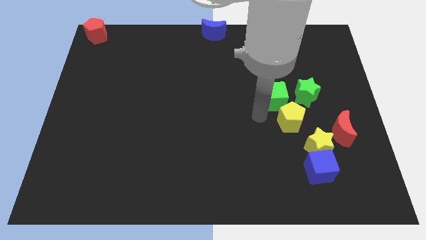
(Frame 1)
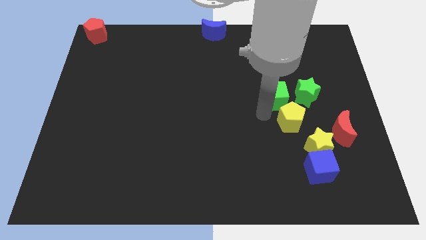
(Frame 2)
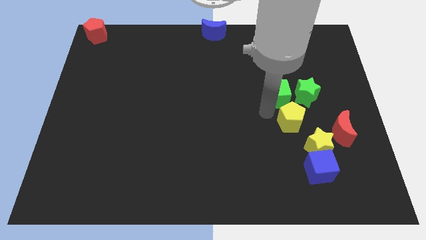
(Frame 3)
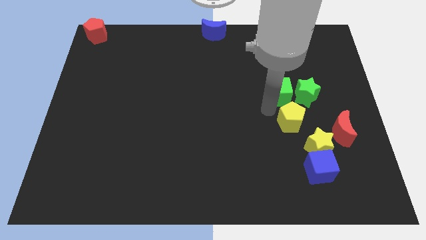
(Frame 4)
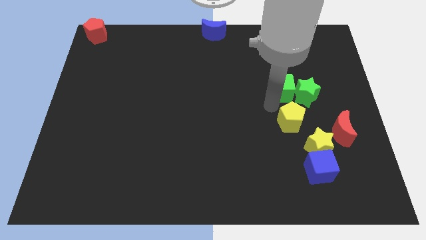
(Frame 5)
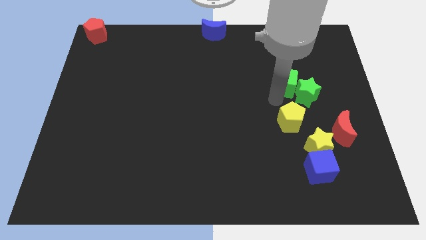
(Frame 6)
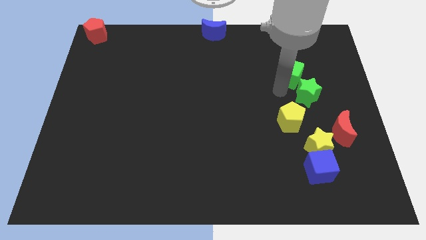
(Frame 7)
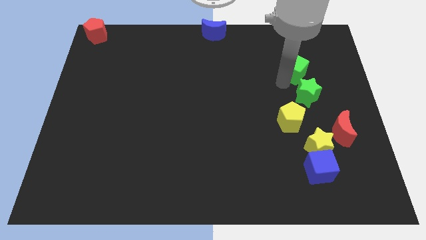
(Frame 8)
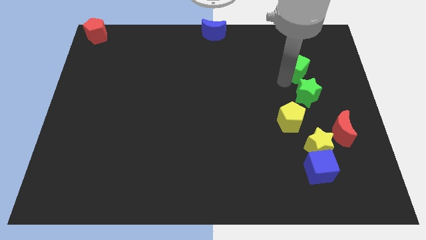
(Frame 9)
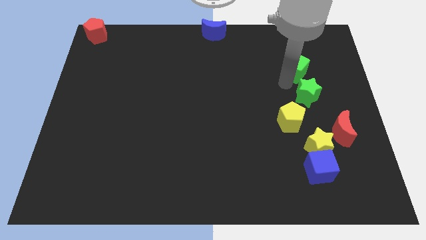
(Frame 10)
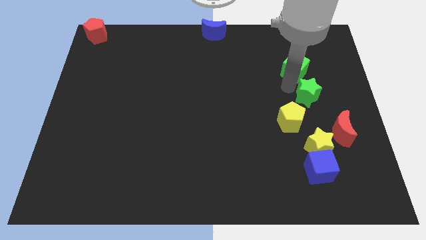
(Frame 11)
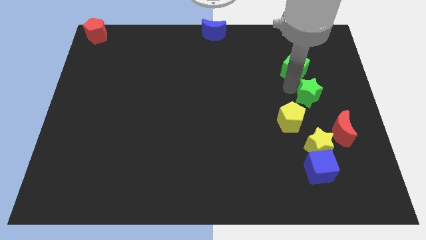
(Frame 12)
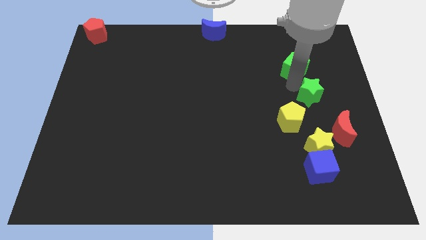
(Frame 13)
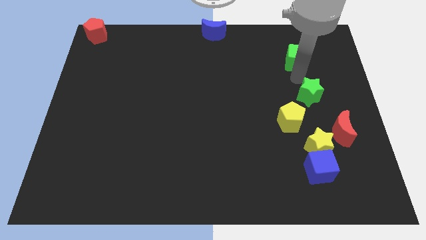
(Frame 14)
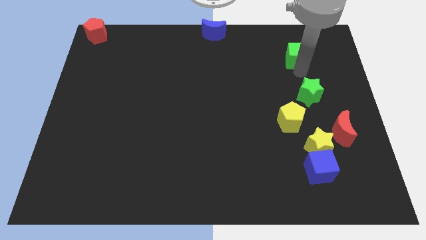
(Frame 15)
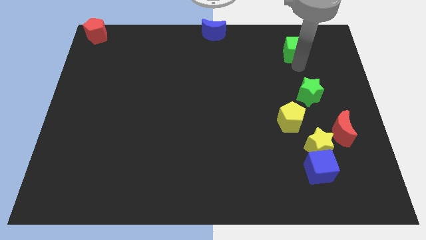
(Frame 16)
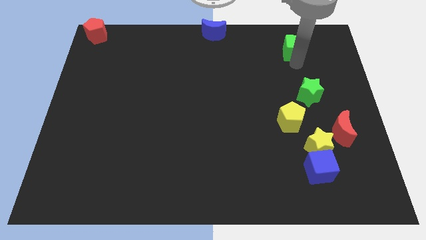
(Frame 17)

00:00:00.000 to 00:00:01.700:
move the green cube above the green star

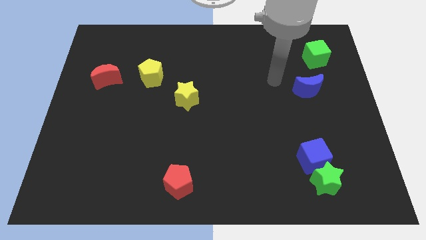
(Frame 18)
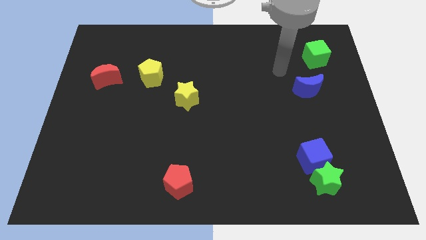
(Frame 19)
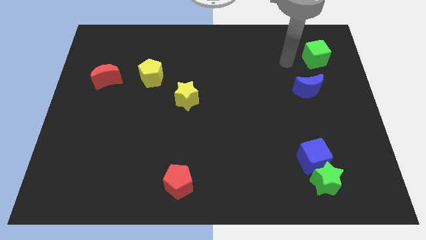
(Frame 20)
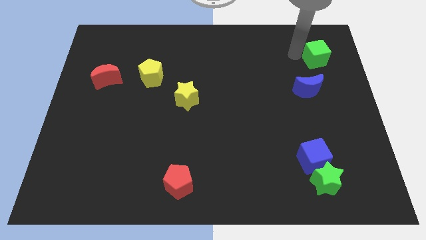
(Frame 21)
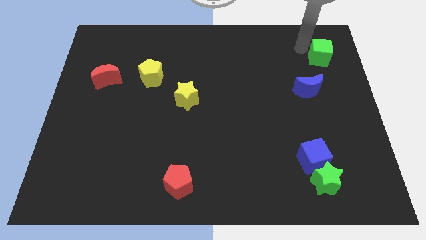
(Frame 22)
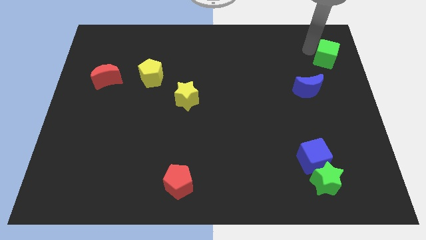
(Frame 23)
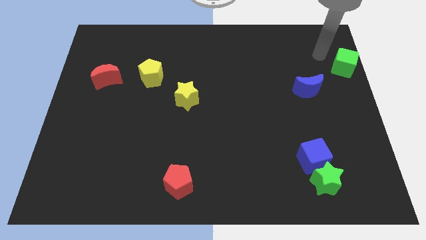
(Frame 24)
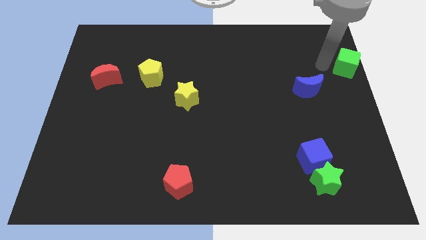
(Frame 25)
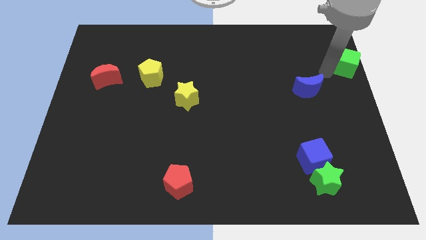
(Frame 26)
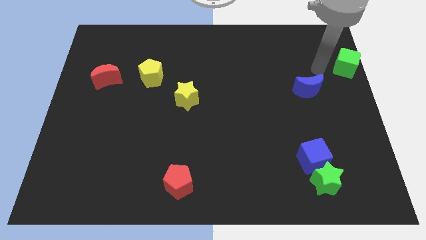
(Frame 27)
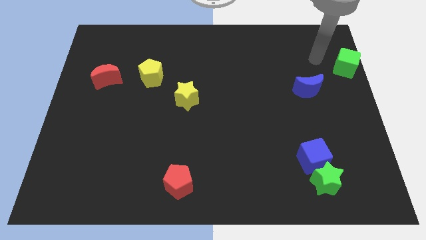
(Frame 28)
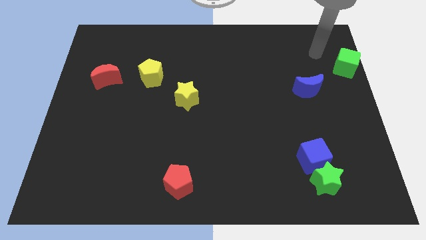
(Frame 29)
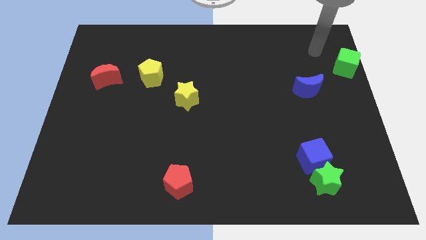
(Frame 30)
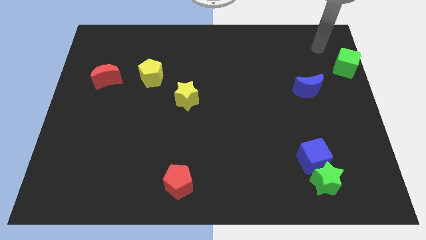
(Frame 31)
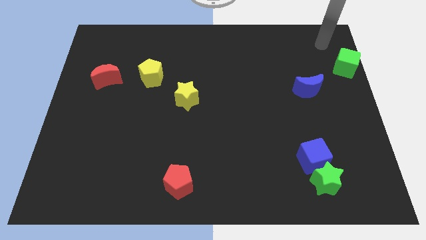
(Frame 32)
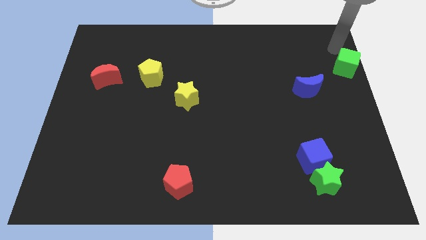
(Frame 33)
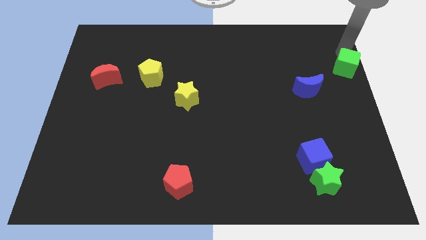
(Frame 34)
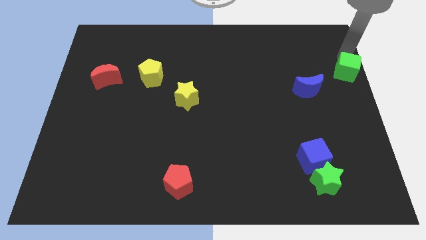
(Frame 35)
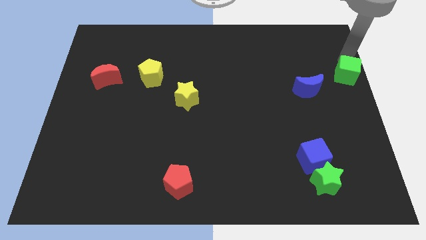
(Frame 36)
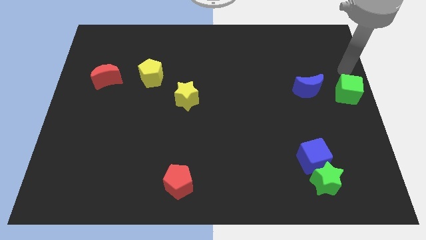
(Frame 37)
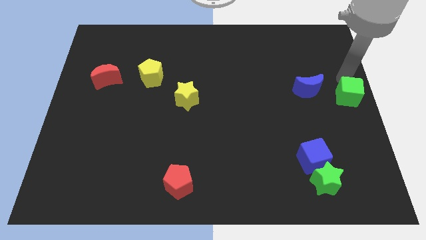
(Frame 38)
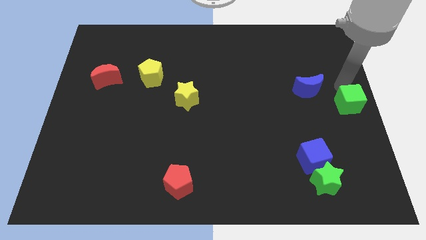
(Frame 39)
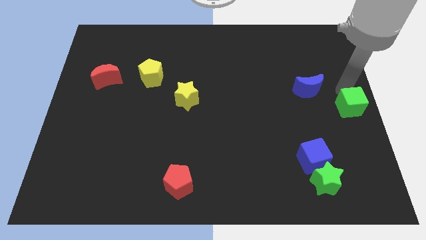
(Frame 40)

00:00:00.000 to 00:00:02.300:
place green cube on center right

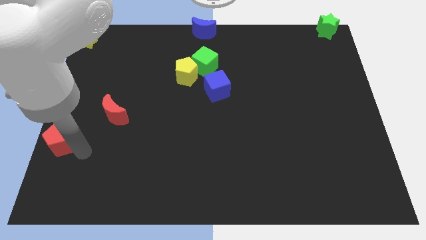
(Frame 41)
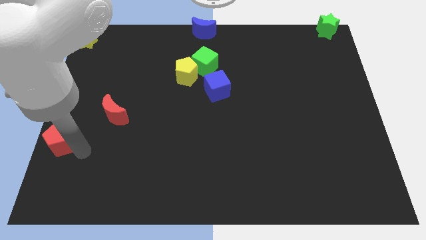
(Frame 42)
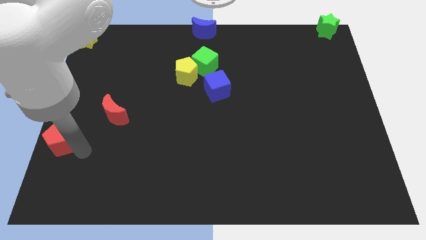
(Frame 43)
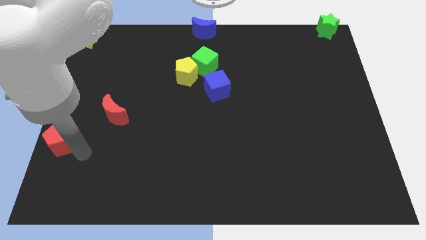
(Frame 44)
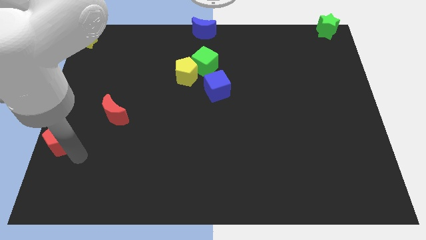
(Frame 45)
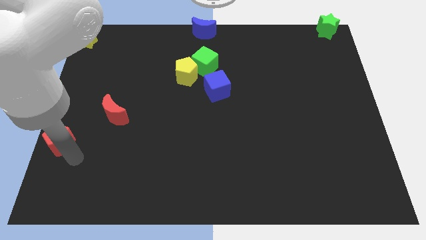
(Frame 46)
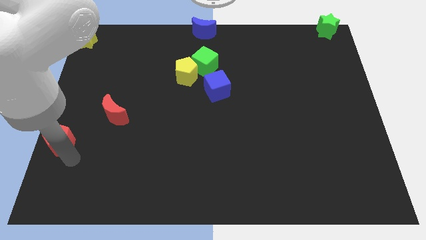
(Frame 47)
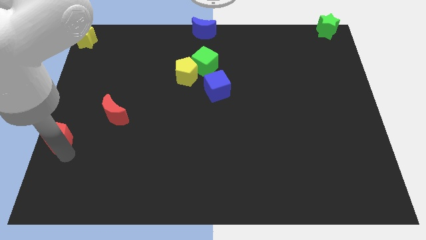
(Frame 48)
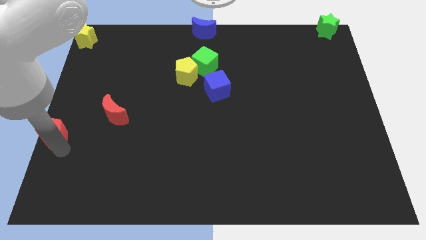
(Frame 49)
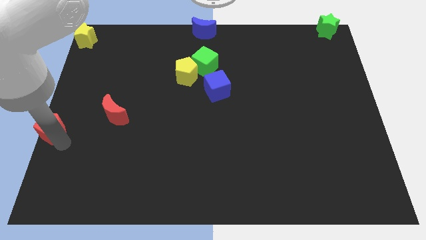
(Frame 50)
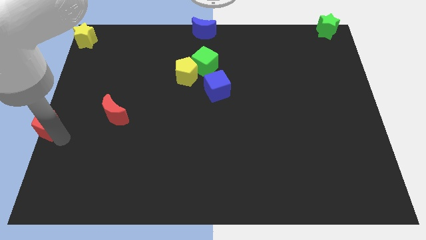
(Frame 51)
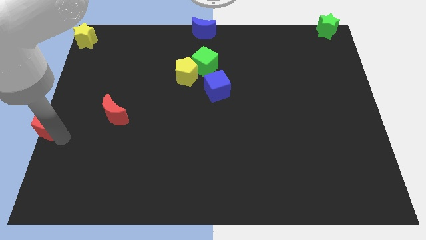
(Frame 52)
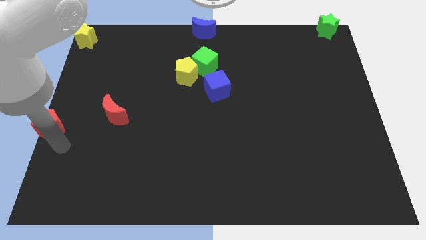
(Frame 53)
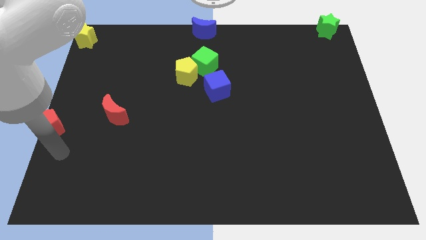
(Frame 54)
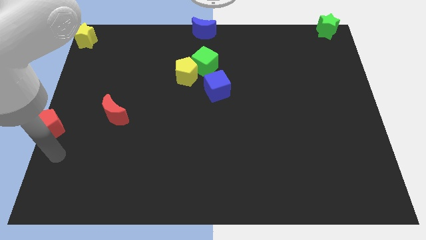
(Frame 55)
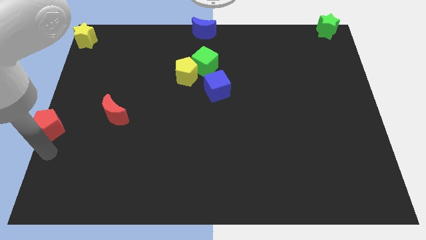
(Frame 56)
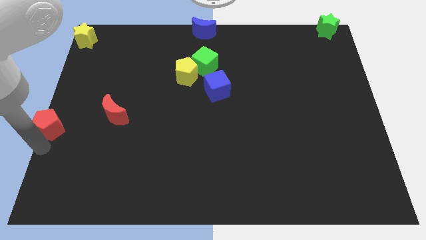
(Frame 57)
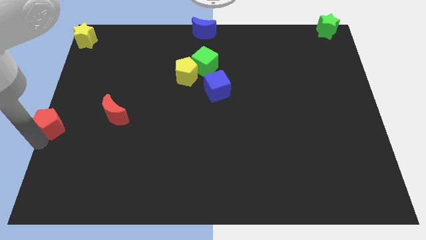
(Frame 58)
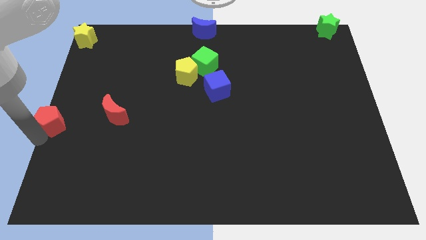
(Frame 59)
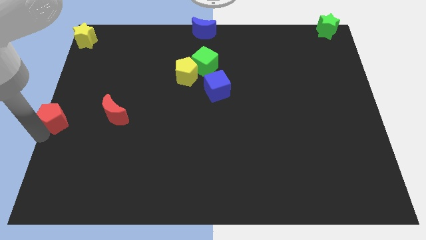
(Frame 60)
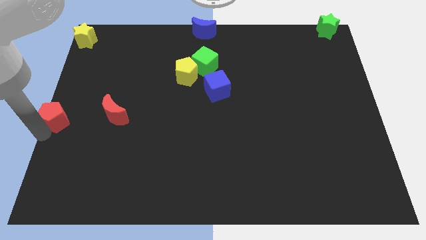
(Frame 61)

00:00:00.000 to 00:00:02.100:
push the red pentagon at the center left side of the board

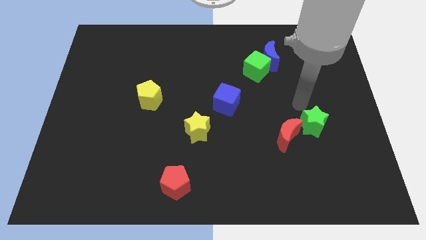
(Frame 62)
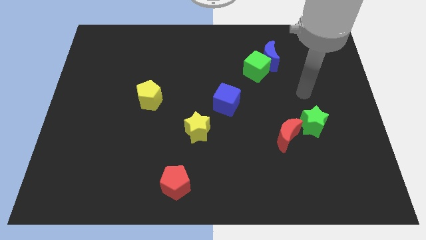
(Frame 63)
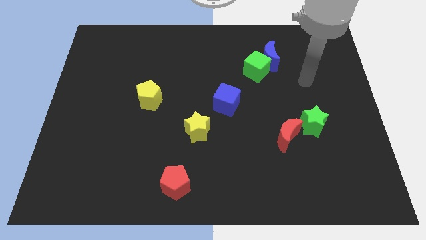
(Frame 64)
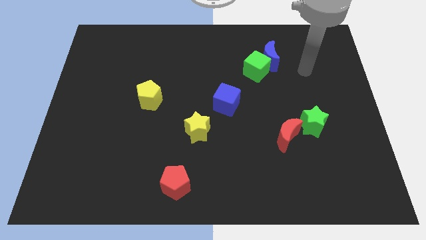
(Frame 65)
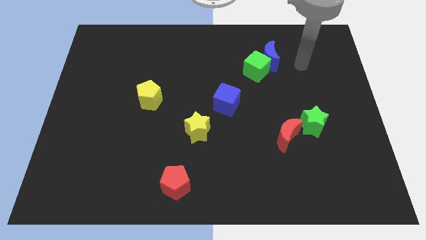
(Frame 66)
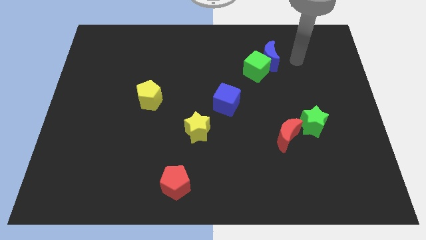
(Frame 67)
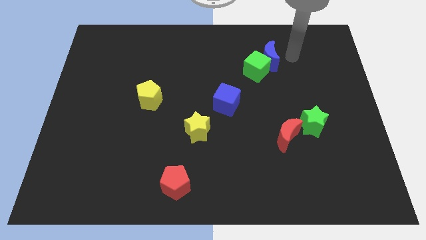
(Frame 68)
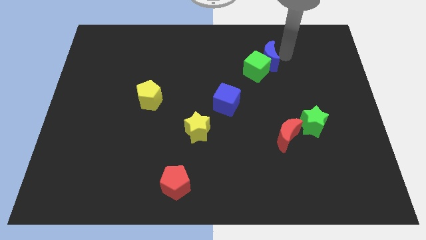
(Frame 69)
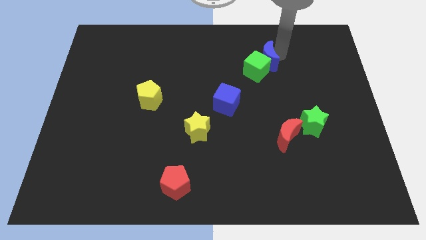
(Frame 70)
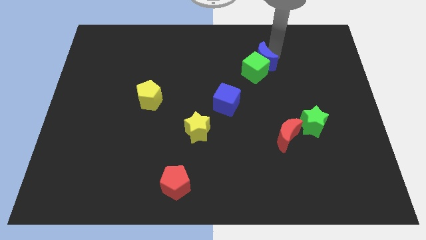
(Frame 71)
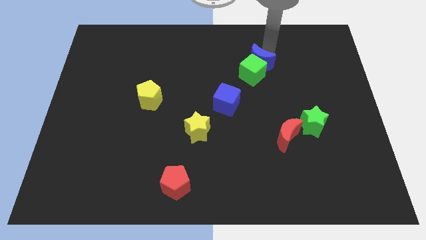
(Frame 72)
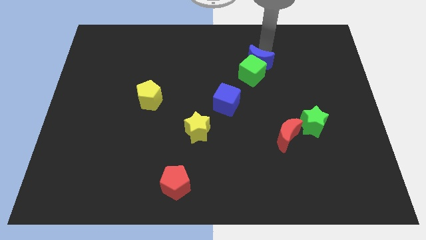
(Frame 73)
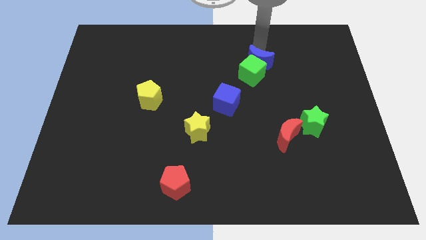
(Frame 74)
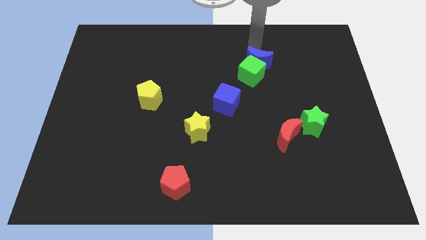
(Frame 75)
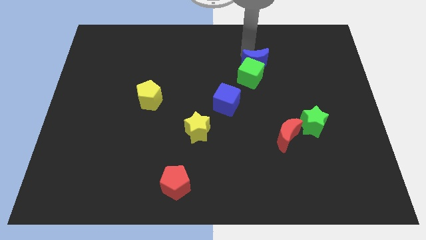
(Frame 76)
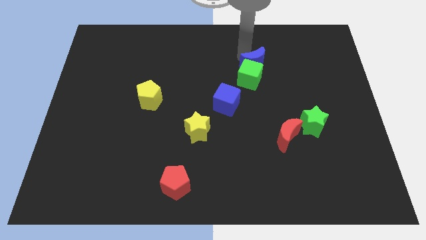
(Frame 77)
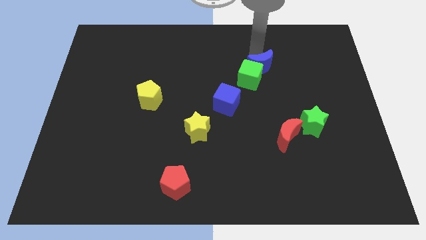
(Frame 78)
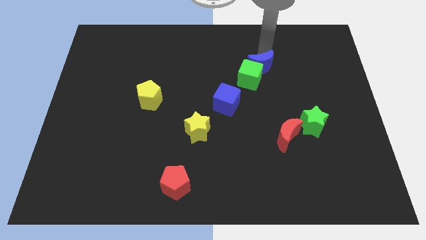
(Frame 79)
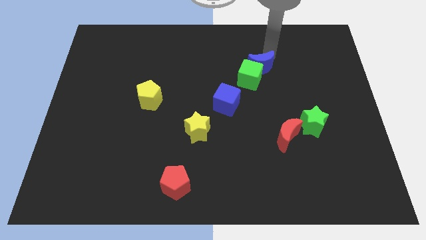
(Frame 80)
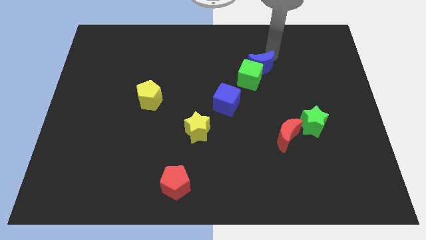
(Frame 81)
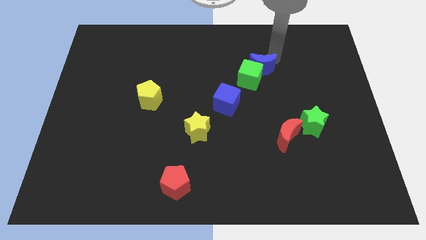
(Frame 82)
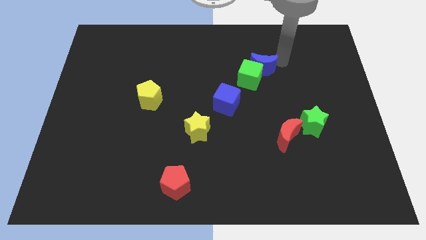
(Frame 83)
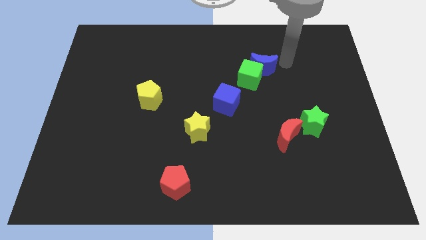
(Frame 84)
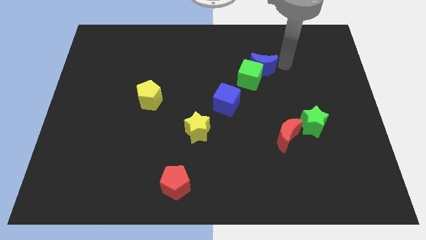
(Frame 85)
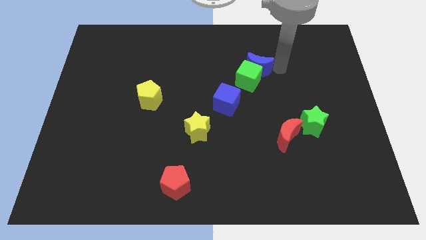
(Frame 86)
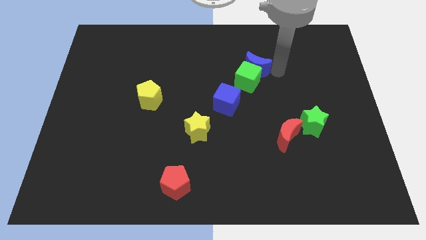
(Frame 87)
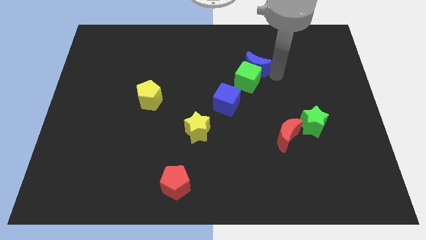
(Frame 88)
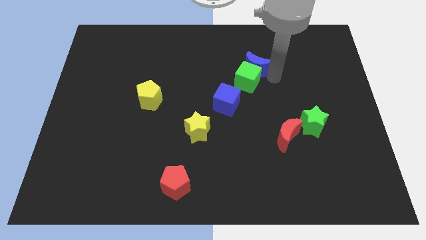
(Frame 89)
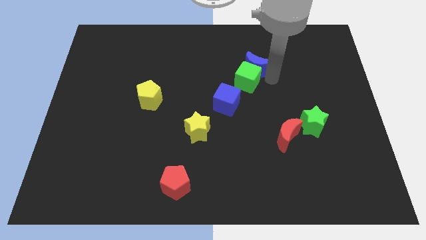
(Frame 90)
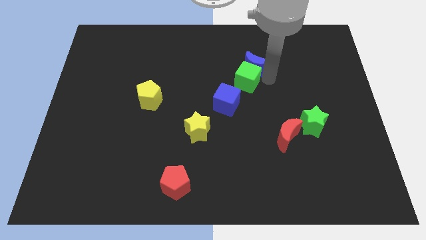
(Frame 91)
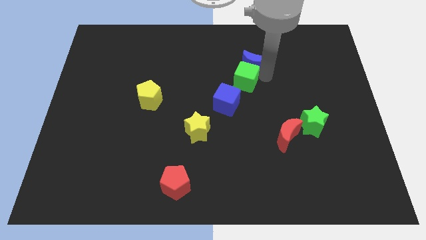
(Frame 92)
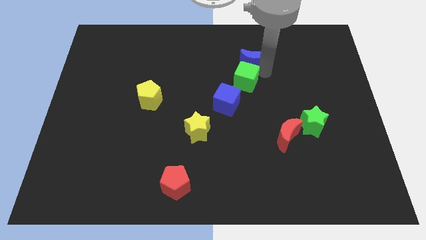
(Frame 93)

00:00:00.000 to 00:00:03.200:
move the green cube and blue crescent diagonally on the top right side of the blue cube
